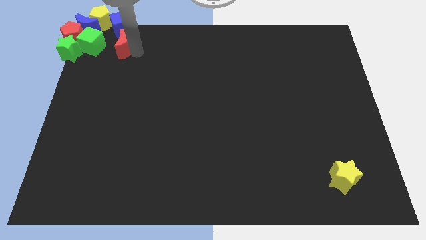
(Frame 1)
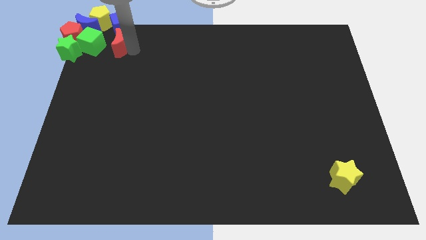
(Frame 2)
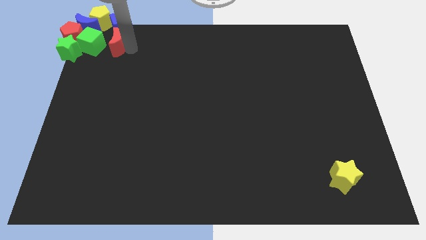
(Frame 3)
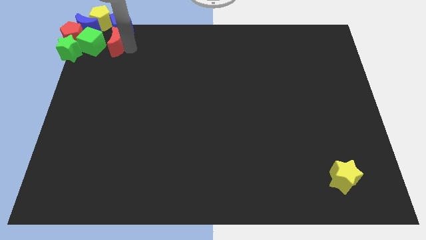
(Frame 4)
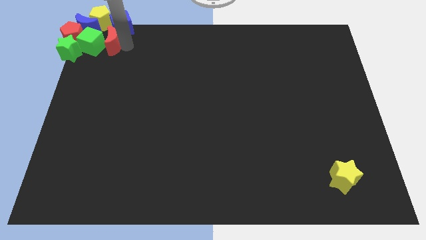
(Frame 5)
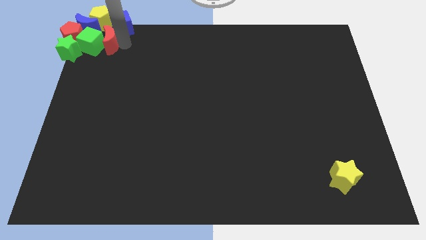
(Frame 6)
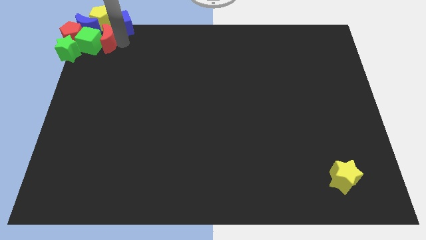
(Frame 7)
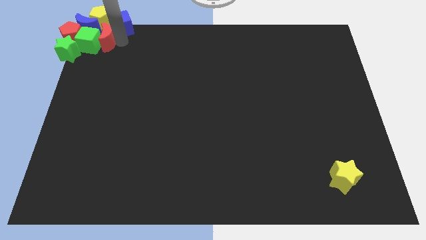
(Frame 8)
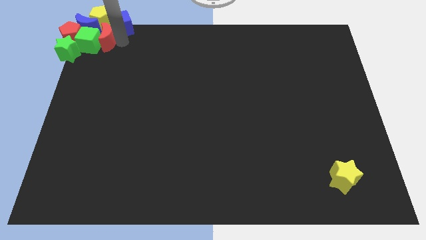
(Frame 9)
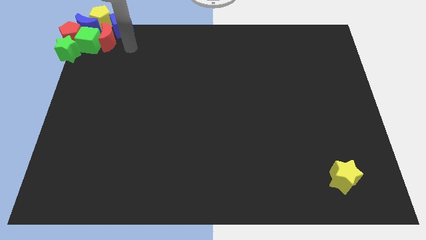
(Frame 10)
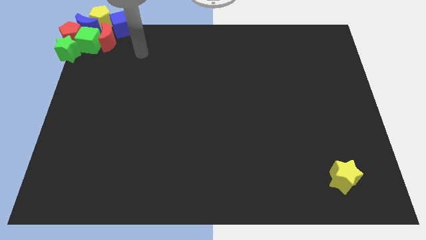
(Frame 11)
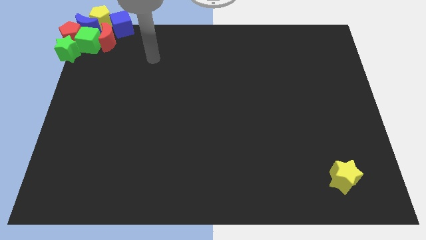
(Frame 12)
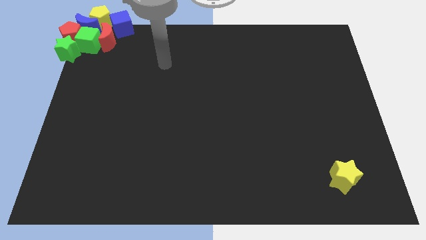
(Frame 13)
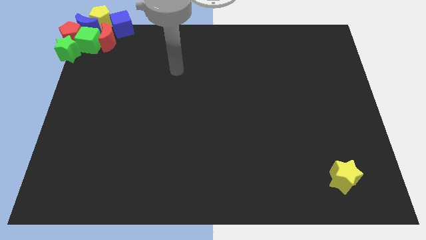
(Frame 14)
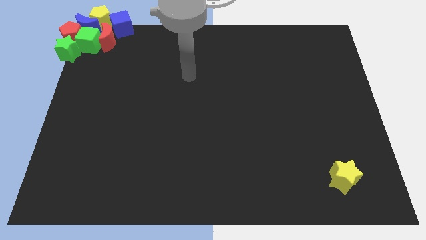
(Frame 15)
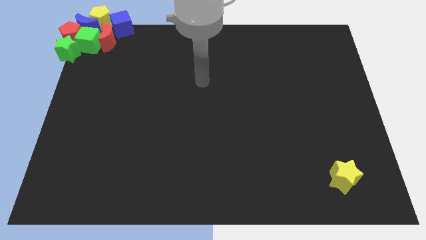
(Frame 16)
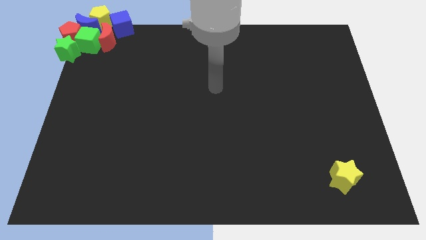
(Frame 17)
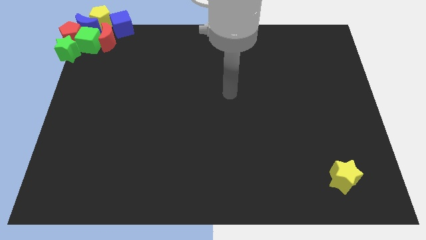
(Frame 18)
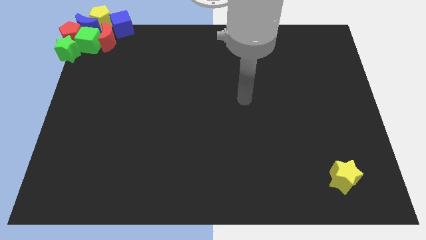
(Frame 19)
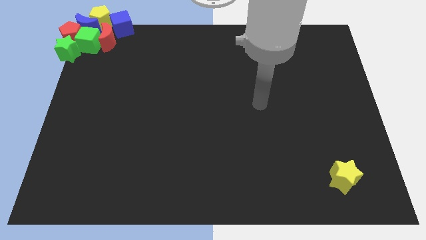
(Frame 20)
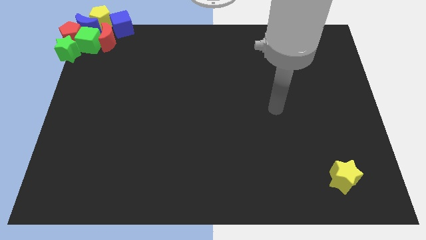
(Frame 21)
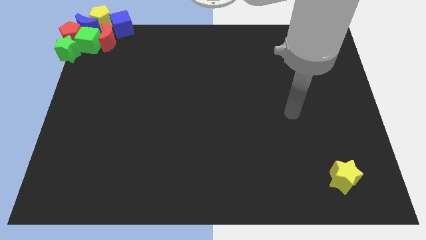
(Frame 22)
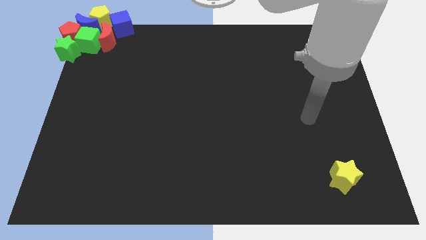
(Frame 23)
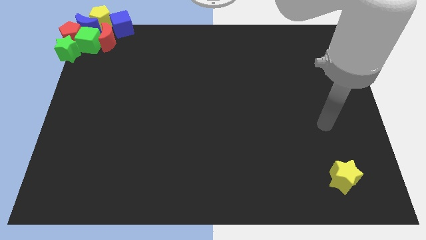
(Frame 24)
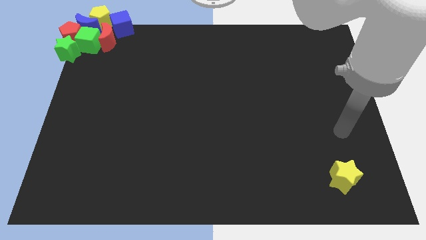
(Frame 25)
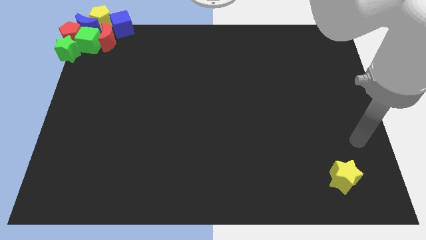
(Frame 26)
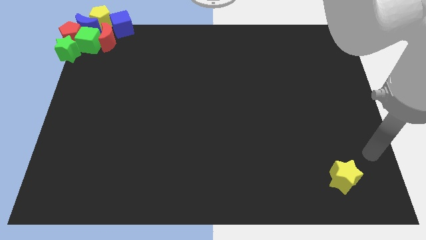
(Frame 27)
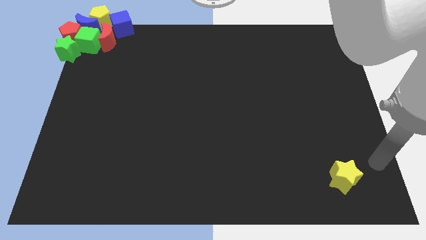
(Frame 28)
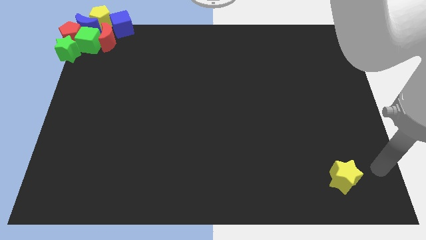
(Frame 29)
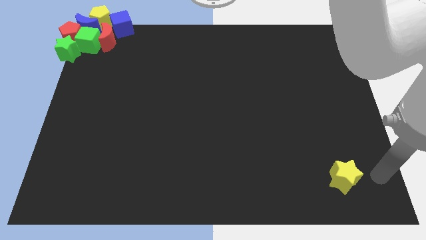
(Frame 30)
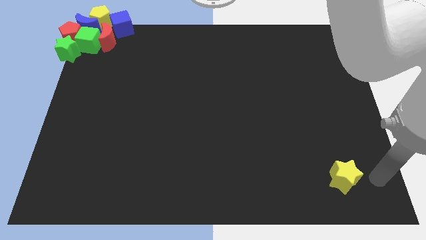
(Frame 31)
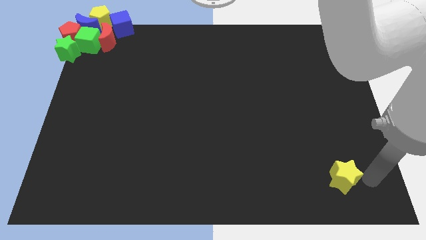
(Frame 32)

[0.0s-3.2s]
push the red crescent into the green cube

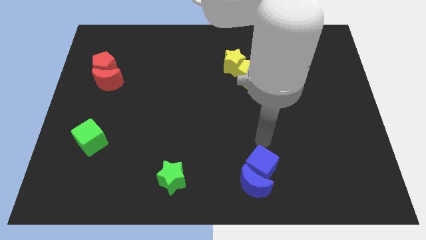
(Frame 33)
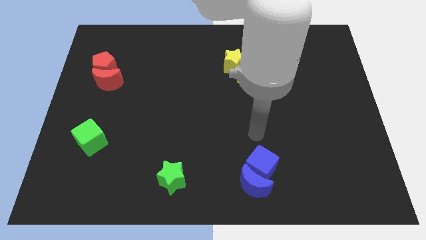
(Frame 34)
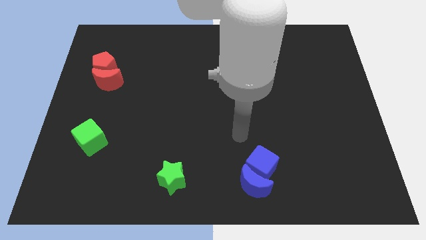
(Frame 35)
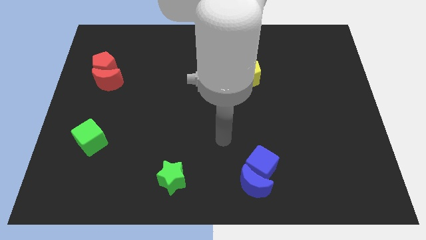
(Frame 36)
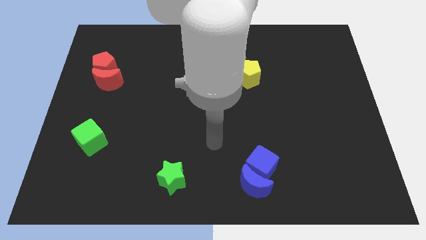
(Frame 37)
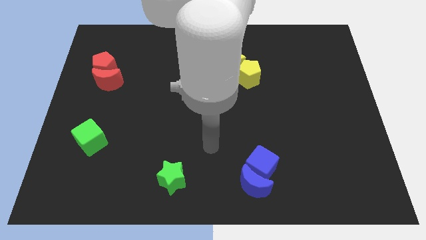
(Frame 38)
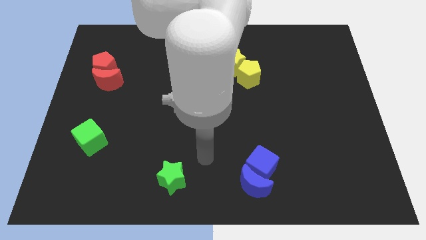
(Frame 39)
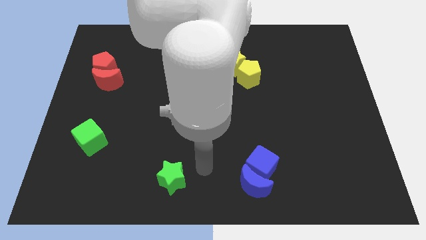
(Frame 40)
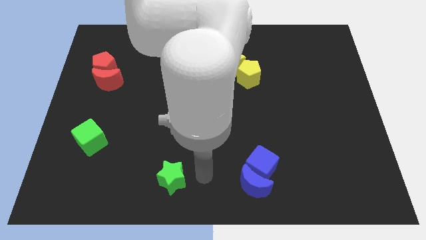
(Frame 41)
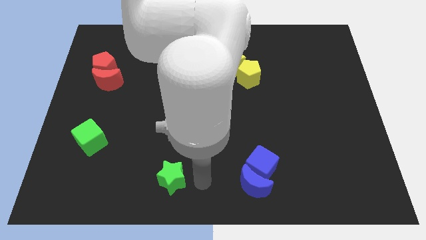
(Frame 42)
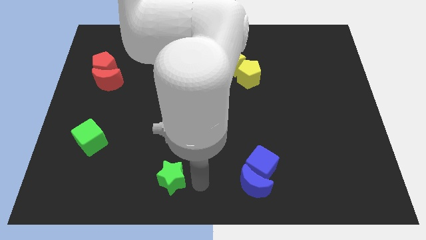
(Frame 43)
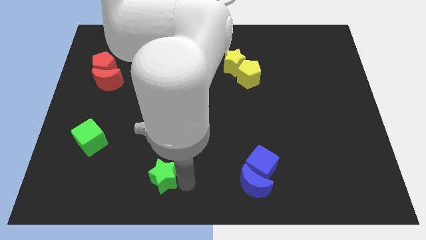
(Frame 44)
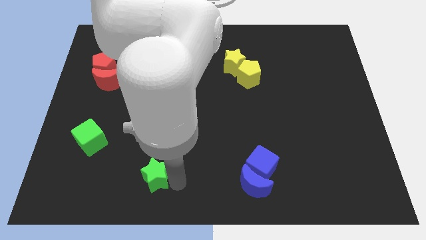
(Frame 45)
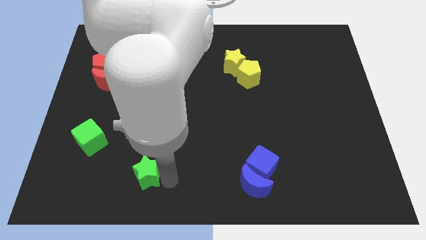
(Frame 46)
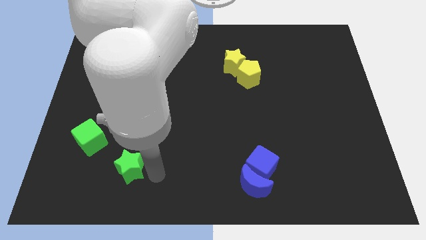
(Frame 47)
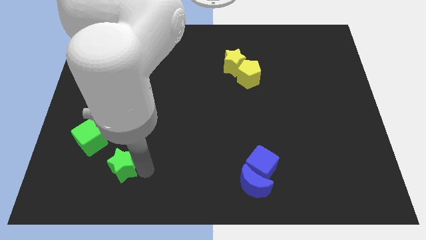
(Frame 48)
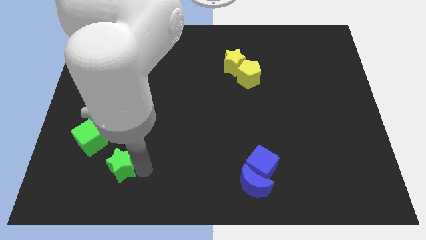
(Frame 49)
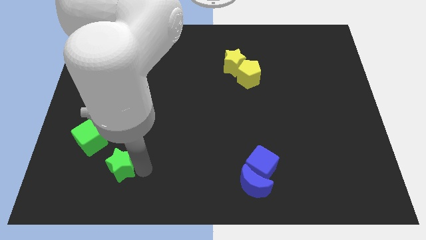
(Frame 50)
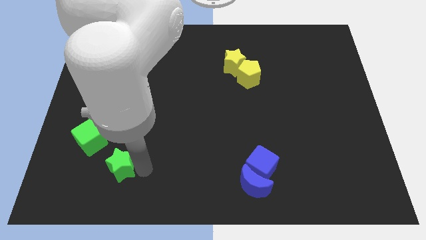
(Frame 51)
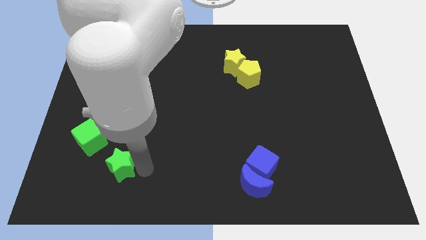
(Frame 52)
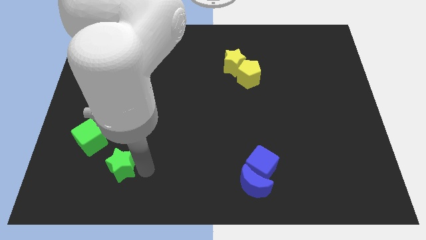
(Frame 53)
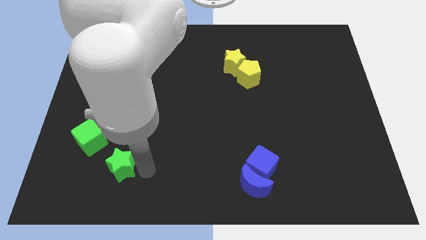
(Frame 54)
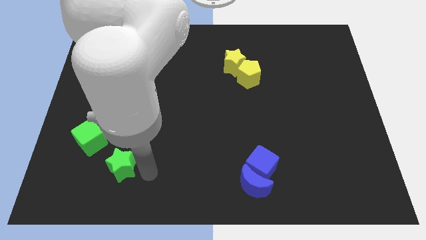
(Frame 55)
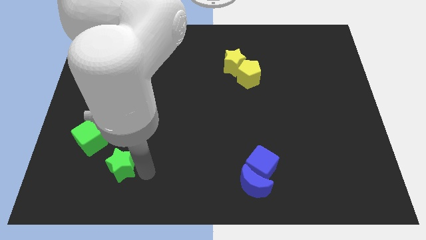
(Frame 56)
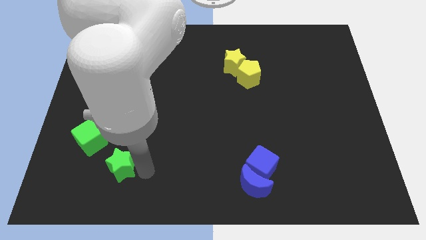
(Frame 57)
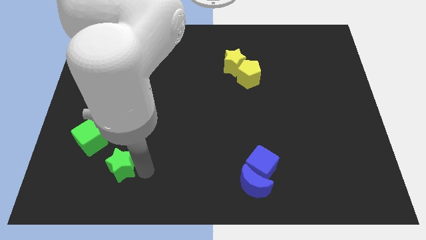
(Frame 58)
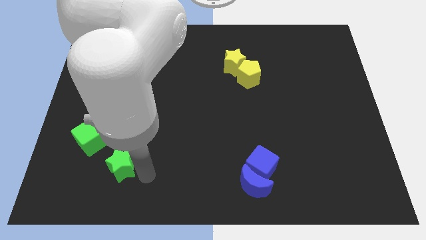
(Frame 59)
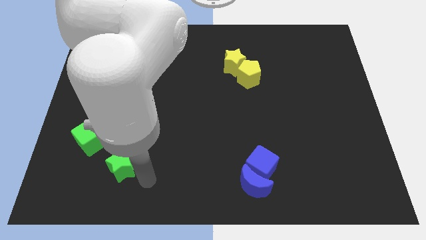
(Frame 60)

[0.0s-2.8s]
move the green star towards green cube

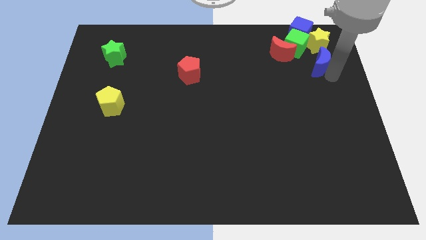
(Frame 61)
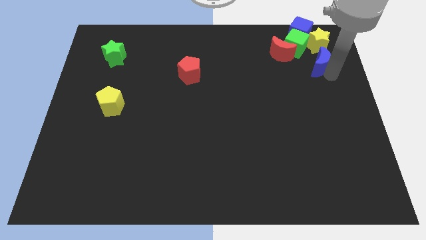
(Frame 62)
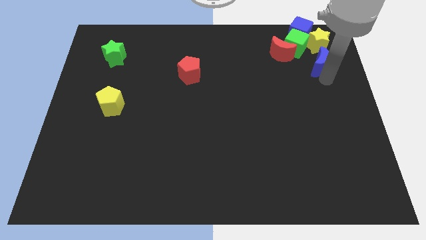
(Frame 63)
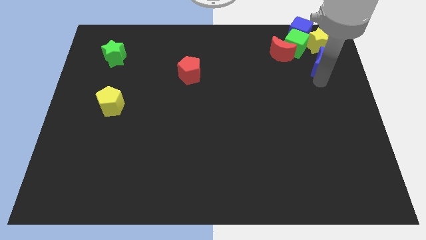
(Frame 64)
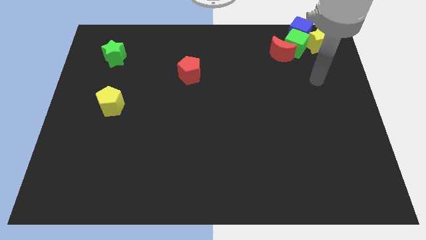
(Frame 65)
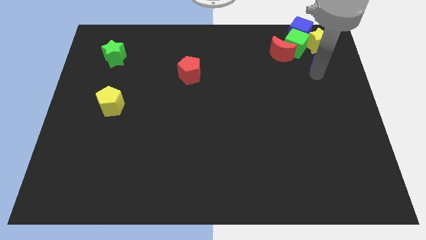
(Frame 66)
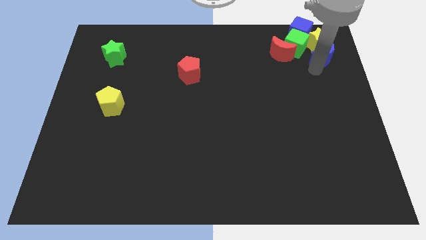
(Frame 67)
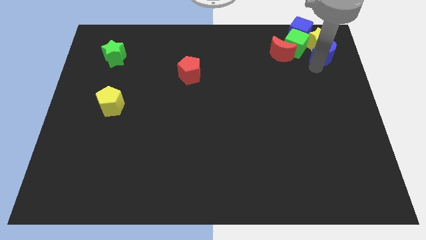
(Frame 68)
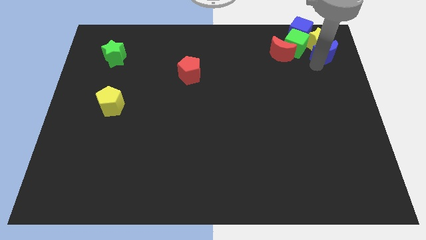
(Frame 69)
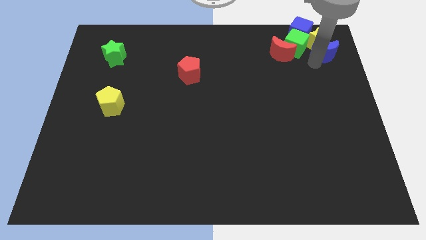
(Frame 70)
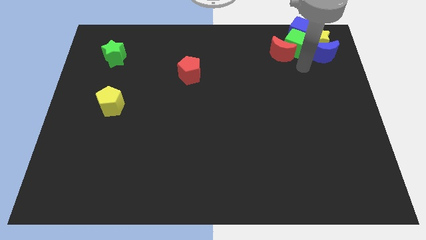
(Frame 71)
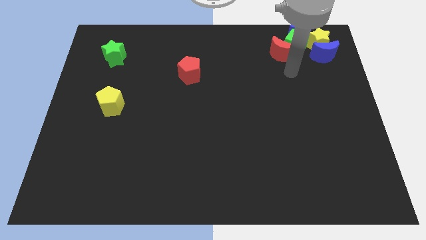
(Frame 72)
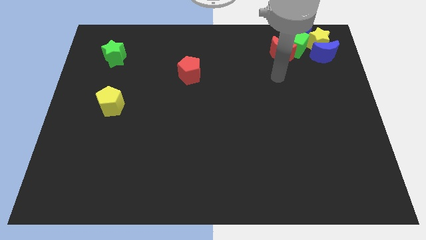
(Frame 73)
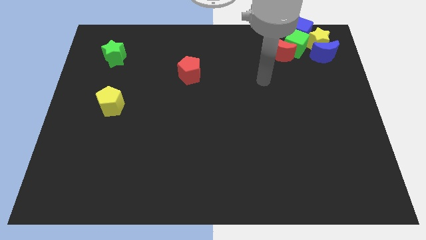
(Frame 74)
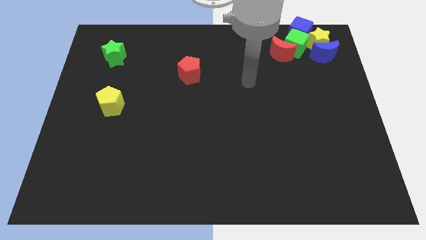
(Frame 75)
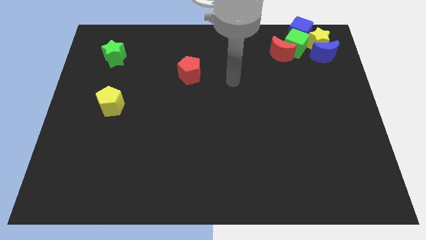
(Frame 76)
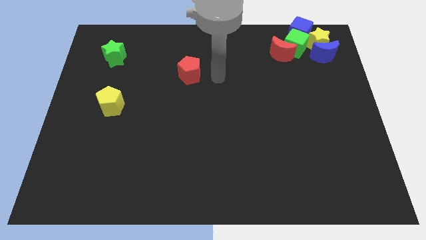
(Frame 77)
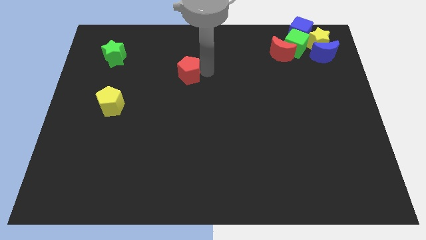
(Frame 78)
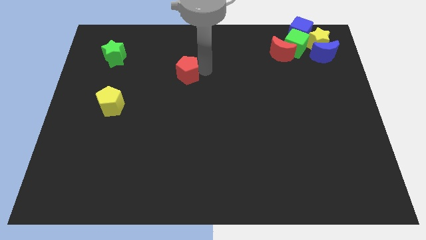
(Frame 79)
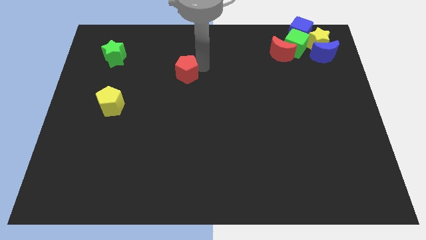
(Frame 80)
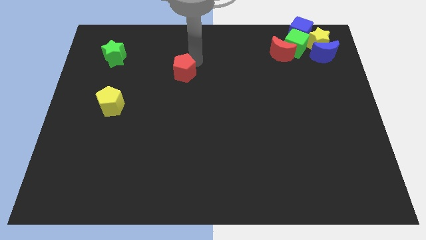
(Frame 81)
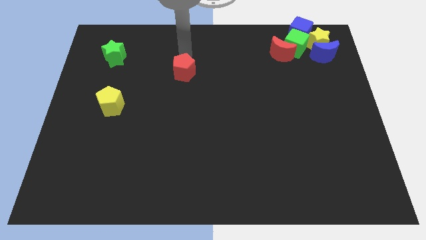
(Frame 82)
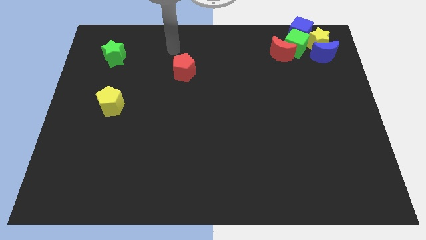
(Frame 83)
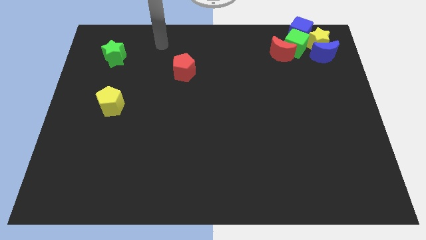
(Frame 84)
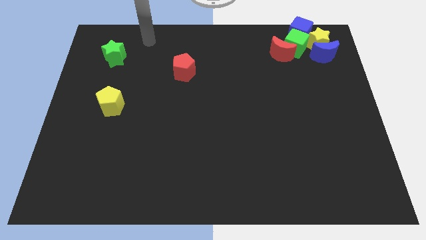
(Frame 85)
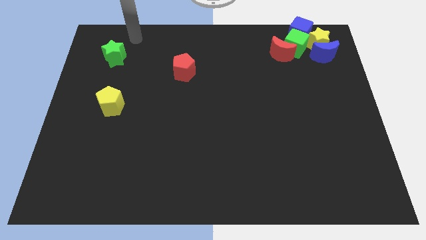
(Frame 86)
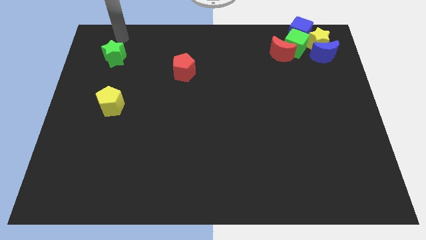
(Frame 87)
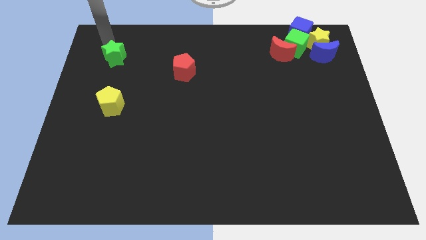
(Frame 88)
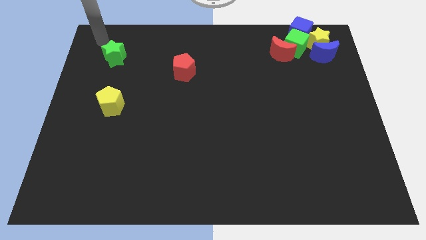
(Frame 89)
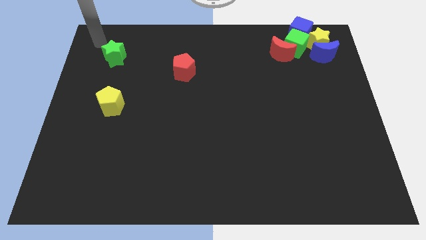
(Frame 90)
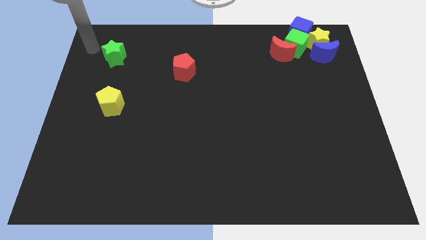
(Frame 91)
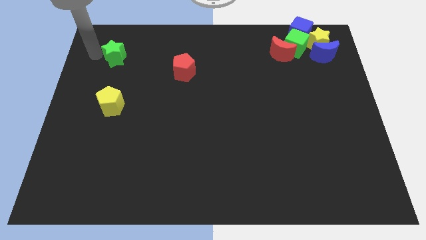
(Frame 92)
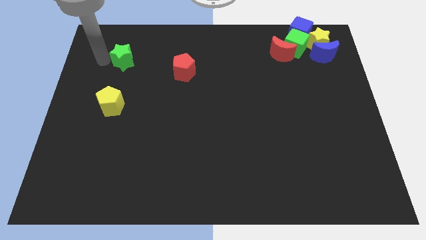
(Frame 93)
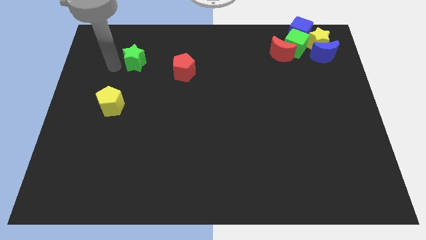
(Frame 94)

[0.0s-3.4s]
move green star towards red pentagon
